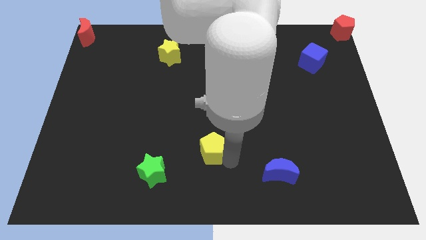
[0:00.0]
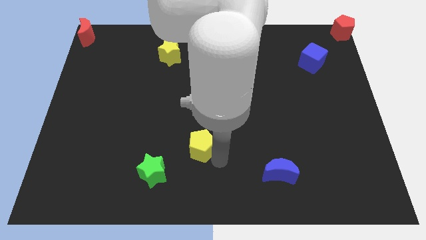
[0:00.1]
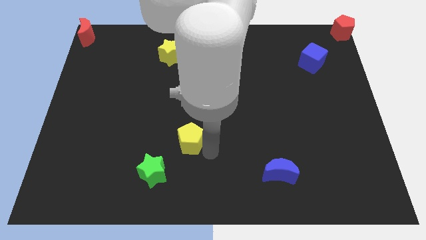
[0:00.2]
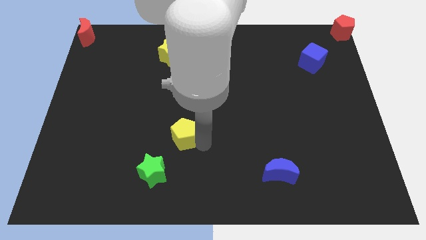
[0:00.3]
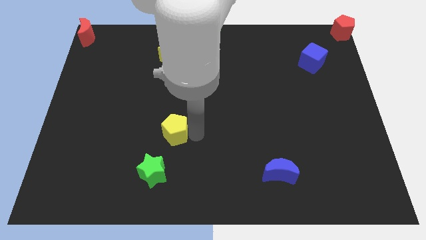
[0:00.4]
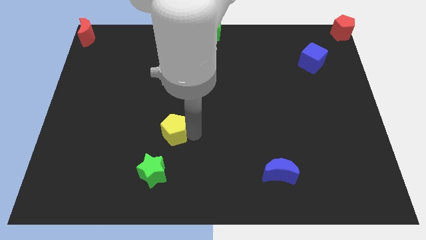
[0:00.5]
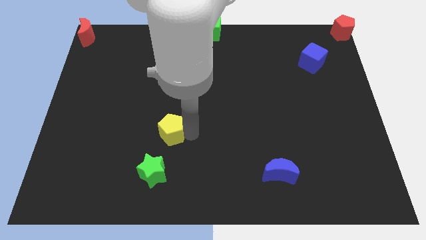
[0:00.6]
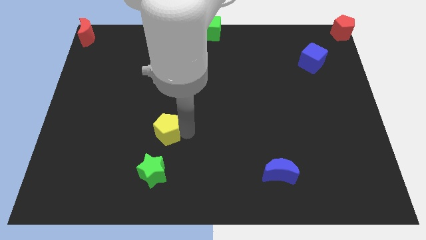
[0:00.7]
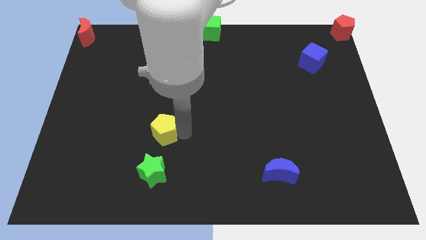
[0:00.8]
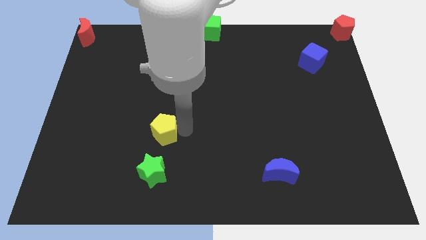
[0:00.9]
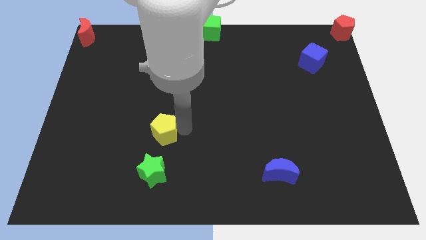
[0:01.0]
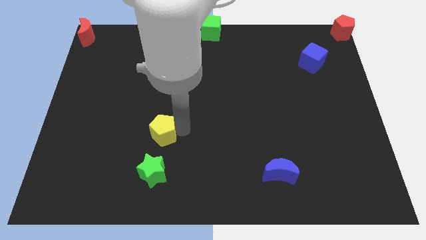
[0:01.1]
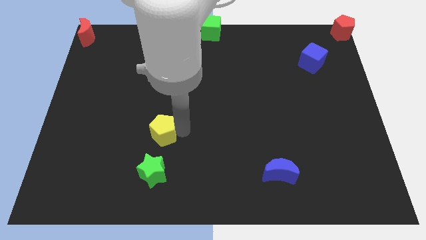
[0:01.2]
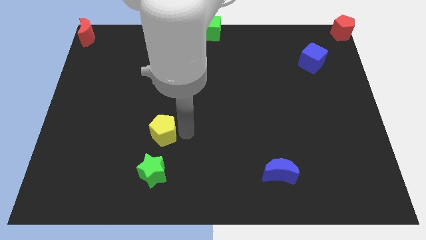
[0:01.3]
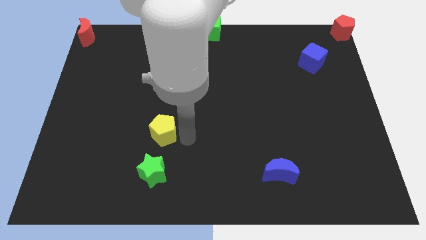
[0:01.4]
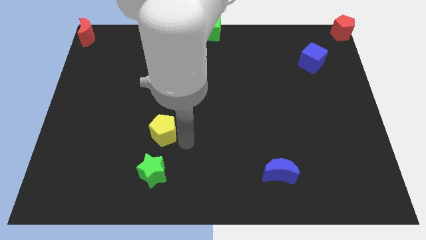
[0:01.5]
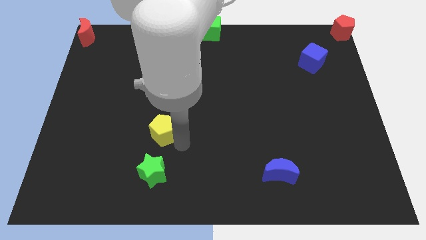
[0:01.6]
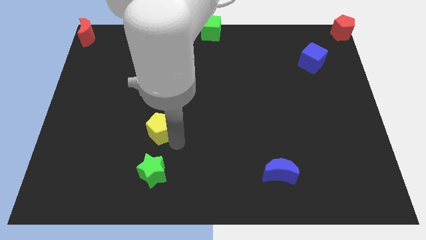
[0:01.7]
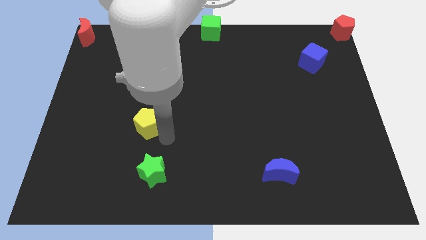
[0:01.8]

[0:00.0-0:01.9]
push yellow pentagon above green star

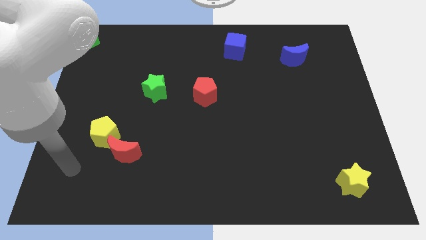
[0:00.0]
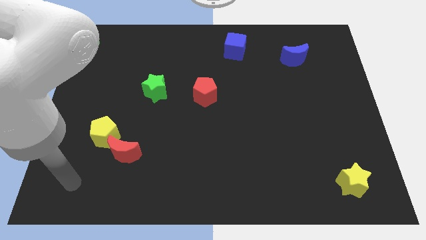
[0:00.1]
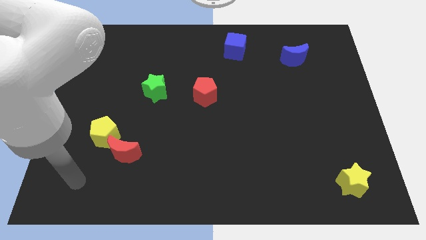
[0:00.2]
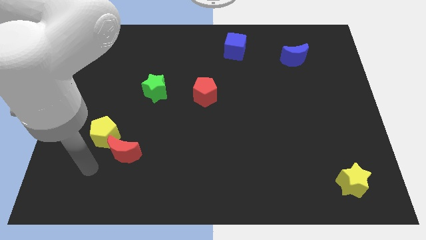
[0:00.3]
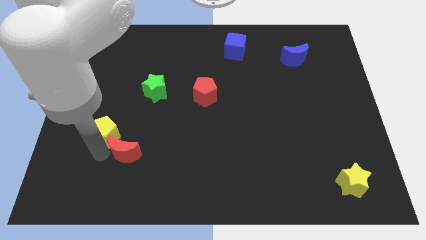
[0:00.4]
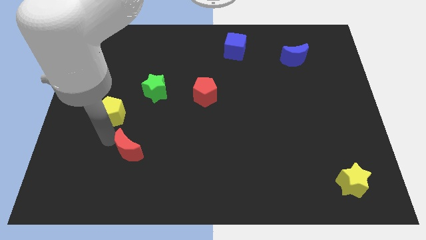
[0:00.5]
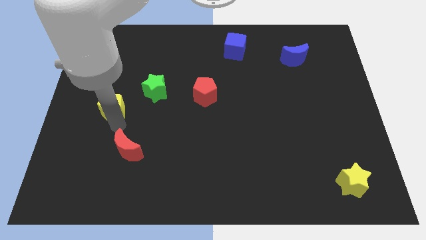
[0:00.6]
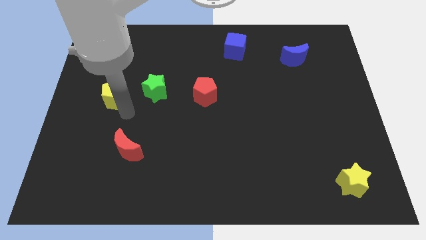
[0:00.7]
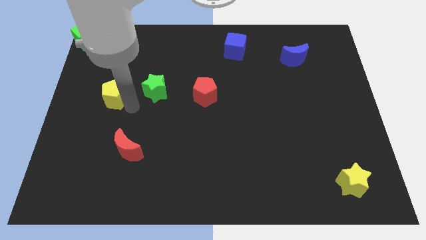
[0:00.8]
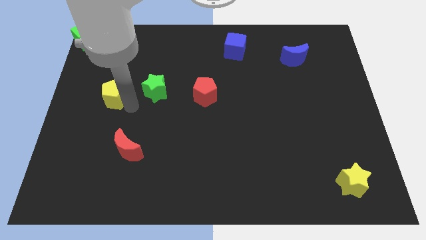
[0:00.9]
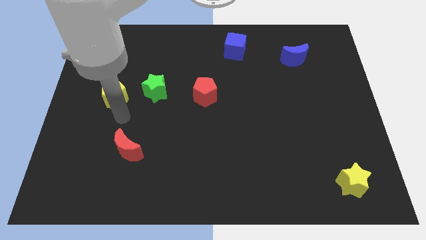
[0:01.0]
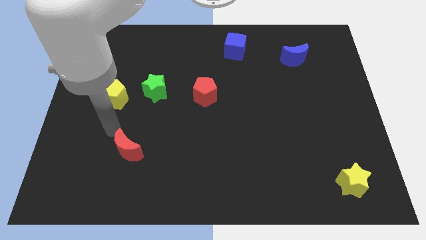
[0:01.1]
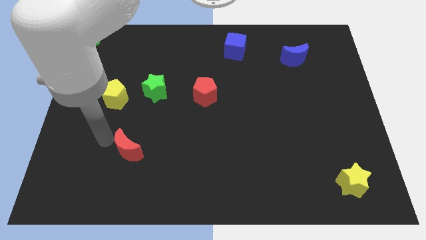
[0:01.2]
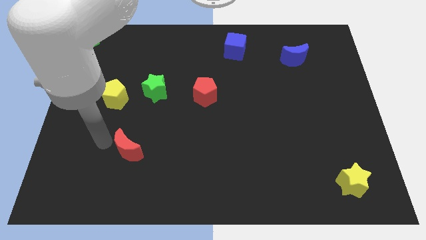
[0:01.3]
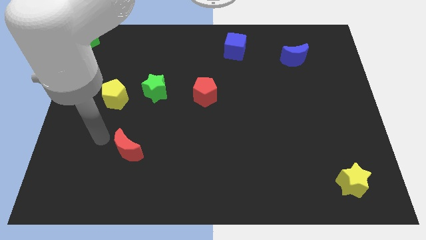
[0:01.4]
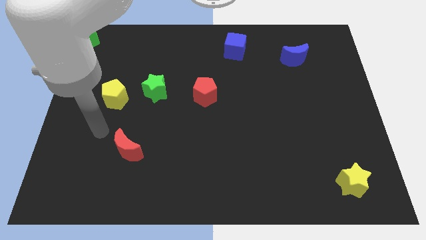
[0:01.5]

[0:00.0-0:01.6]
separate the yellow pentagon and red crescent

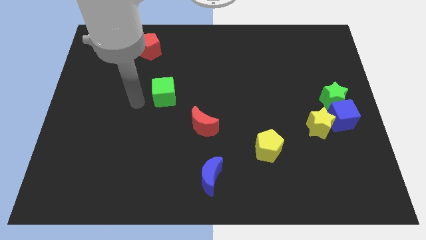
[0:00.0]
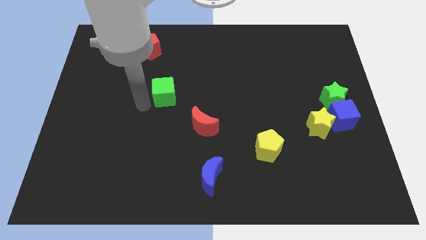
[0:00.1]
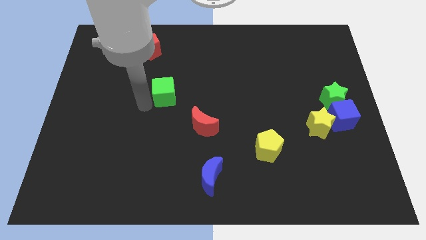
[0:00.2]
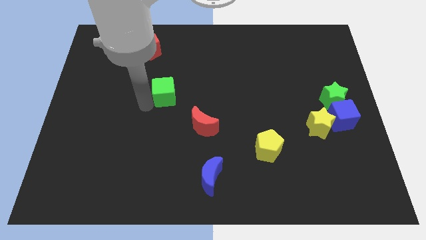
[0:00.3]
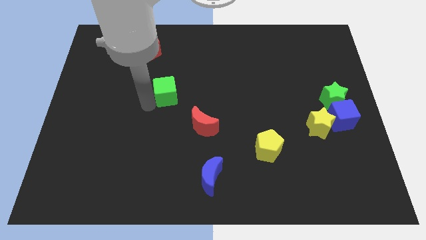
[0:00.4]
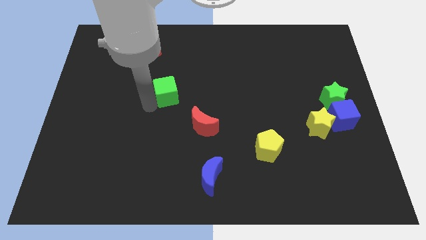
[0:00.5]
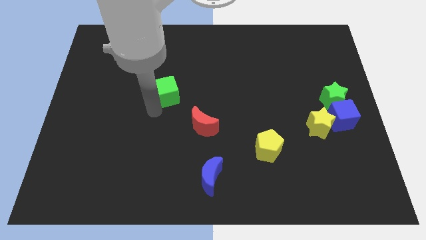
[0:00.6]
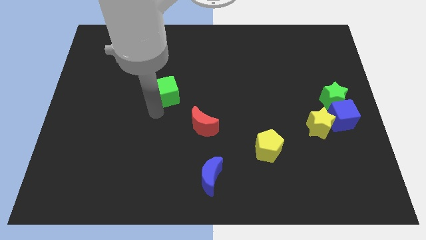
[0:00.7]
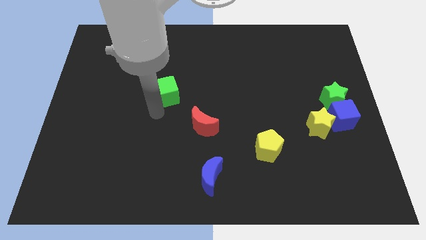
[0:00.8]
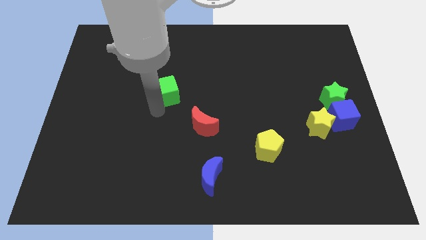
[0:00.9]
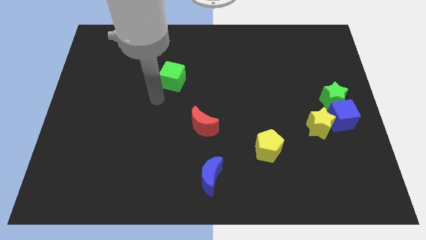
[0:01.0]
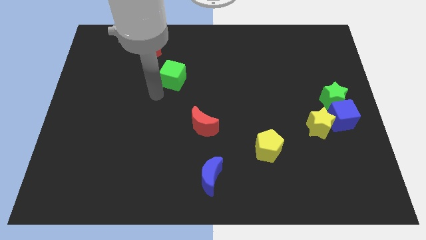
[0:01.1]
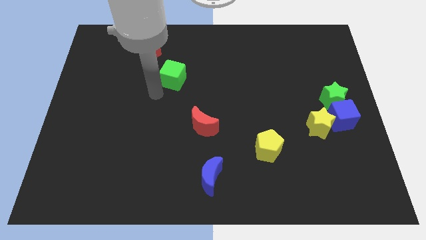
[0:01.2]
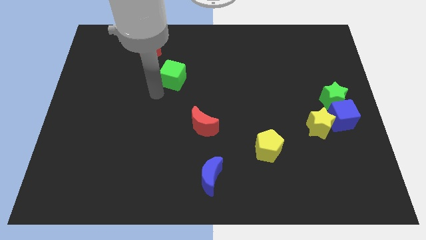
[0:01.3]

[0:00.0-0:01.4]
place the green cube in between the red crescent and red pentagon

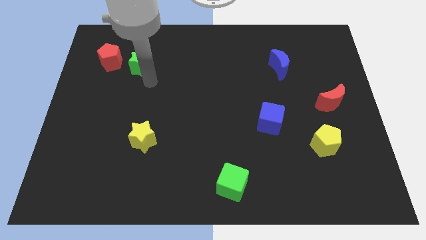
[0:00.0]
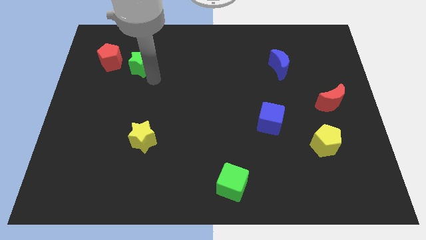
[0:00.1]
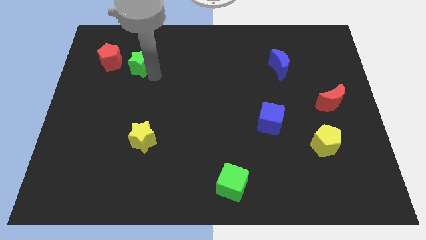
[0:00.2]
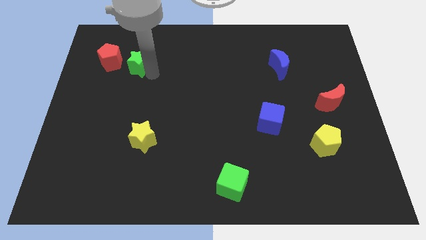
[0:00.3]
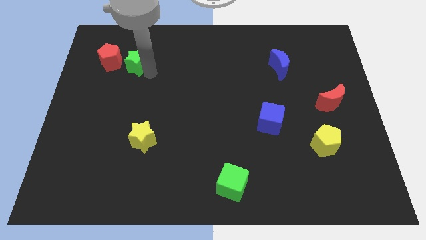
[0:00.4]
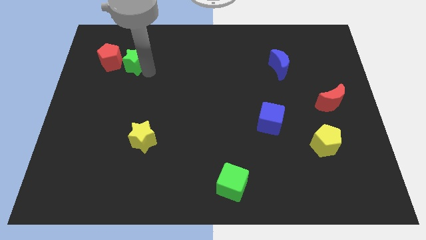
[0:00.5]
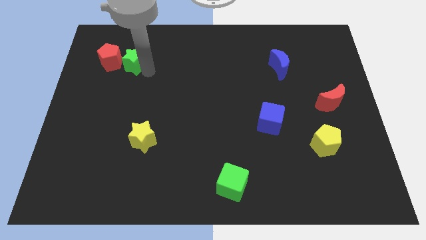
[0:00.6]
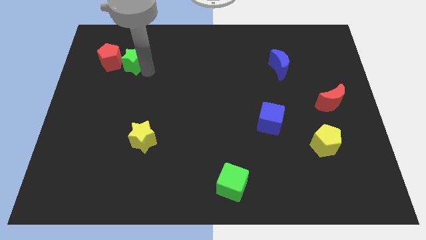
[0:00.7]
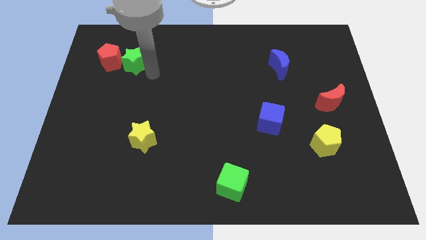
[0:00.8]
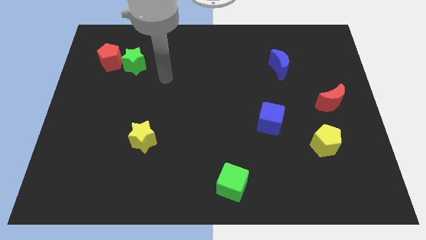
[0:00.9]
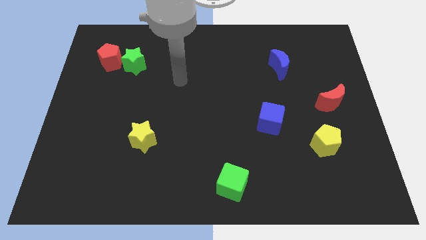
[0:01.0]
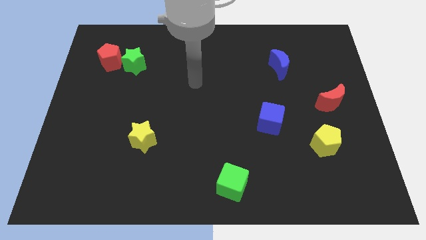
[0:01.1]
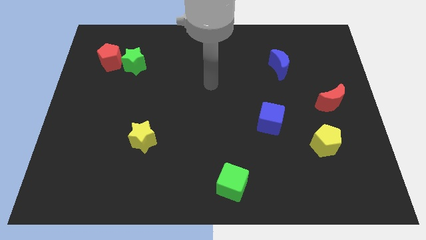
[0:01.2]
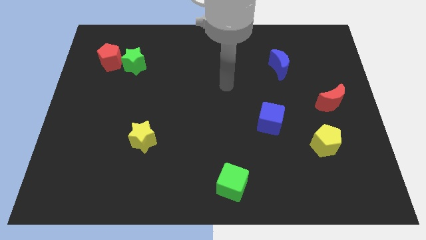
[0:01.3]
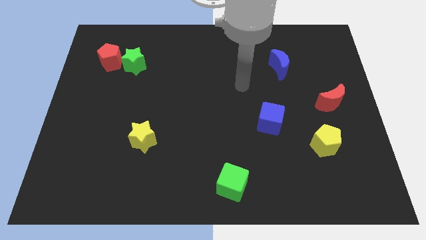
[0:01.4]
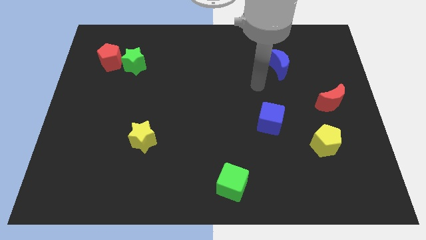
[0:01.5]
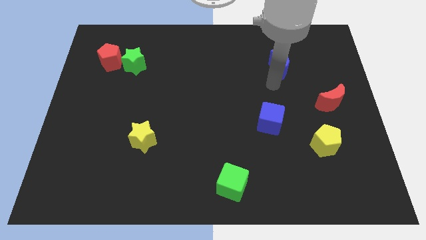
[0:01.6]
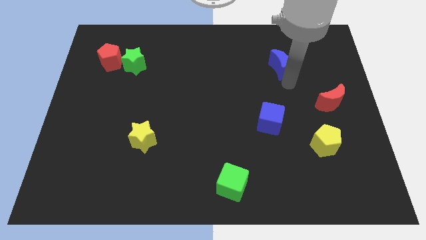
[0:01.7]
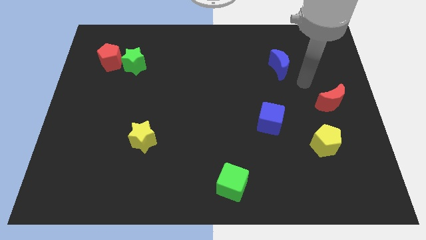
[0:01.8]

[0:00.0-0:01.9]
move your arm towards the blue moon

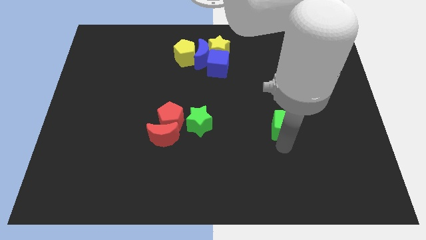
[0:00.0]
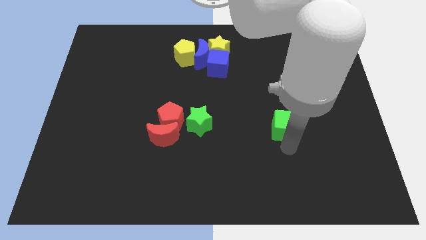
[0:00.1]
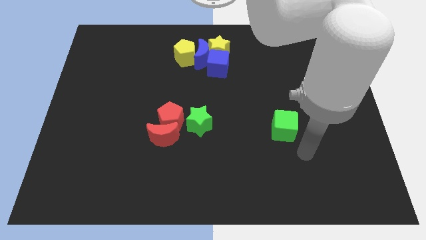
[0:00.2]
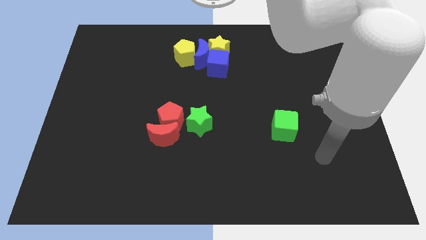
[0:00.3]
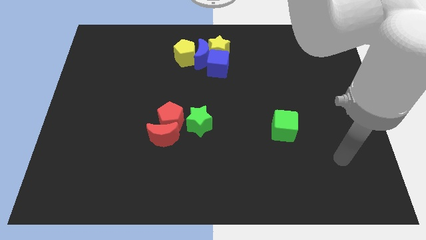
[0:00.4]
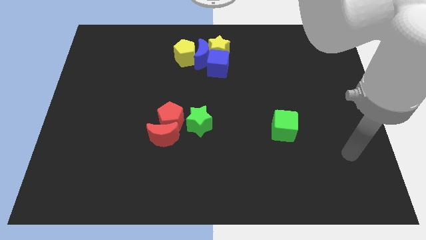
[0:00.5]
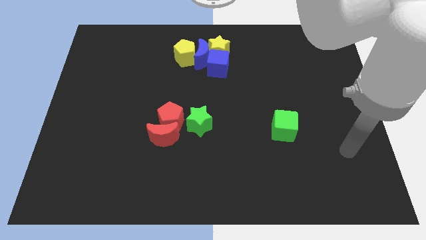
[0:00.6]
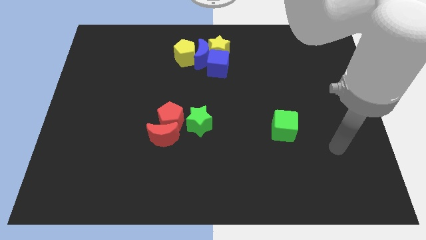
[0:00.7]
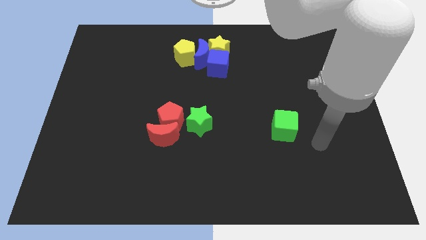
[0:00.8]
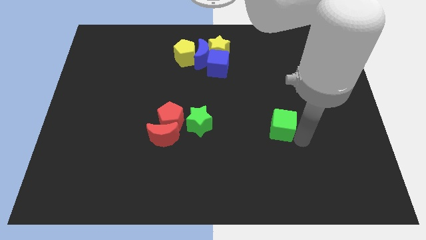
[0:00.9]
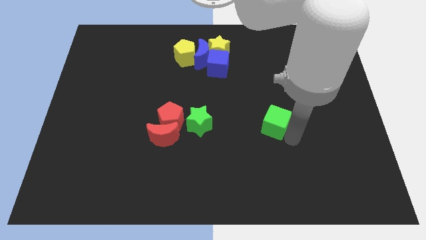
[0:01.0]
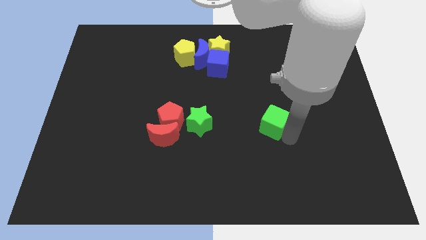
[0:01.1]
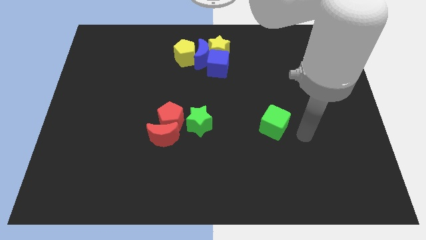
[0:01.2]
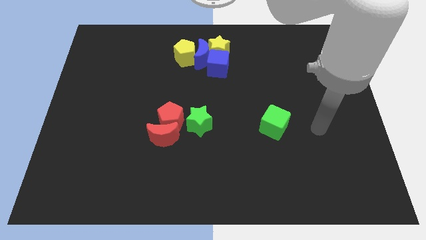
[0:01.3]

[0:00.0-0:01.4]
slide the gren cube slightly towards the right side of the green star

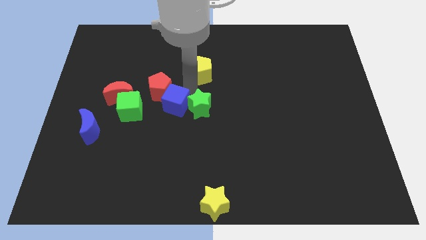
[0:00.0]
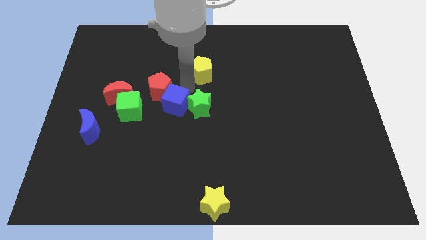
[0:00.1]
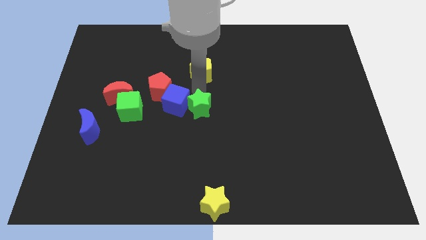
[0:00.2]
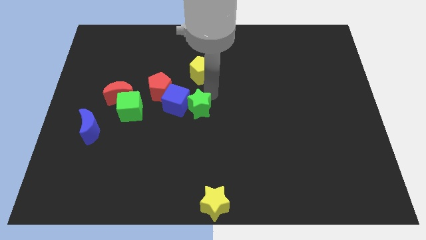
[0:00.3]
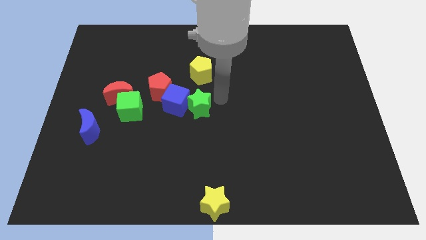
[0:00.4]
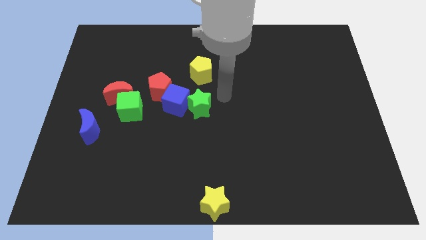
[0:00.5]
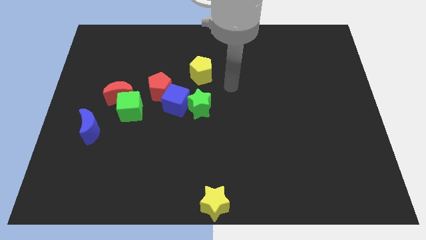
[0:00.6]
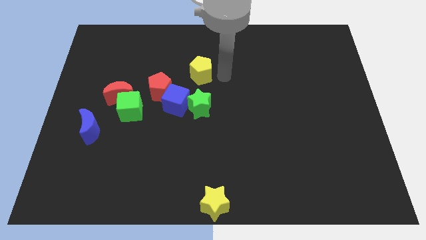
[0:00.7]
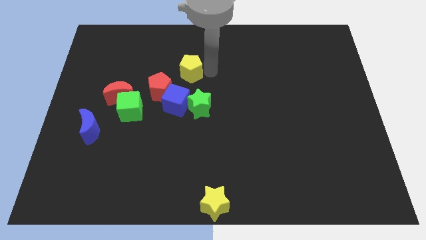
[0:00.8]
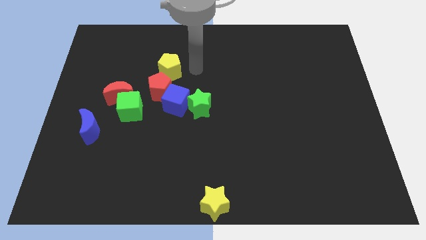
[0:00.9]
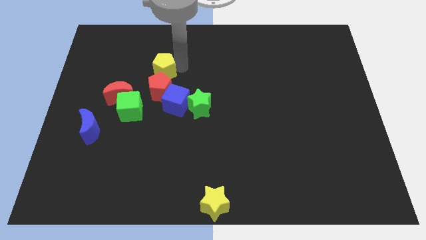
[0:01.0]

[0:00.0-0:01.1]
place the yellow pentagon vertically above the red pentagon
